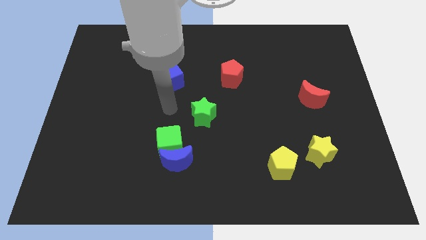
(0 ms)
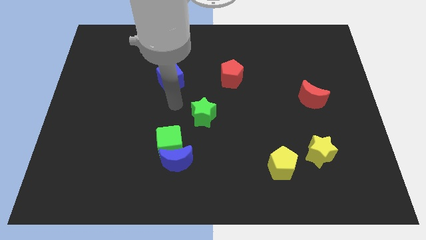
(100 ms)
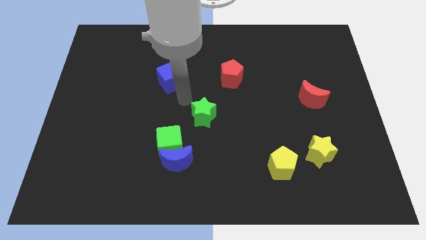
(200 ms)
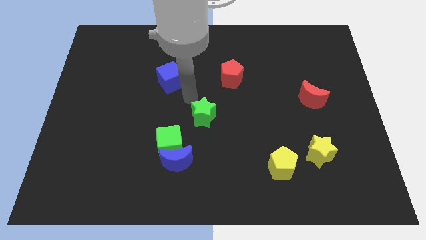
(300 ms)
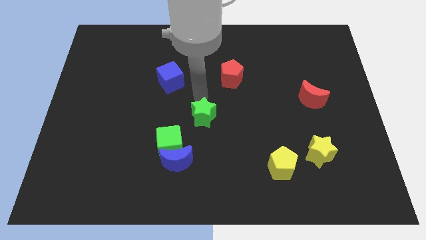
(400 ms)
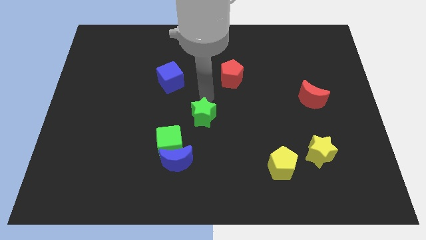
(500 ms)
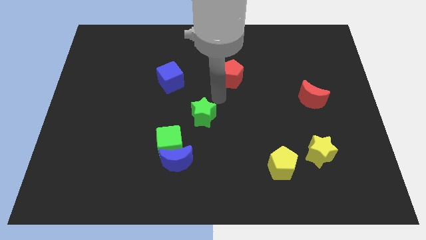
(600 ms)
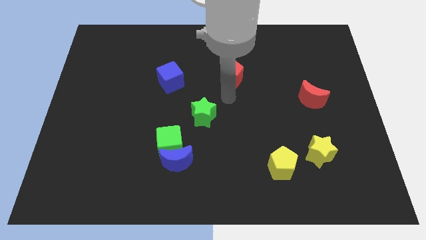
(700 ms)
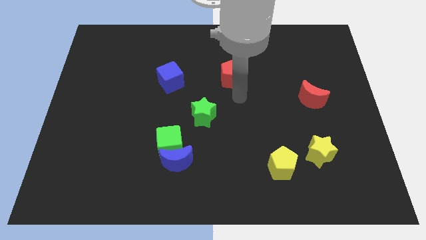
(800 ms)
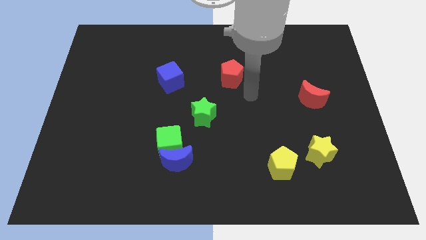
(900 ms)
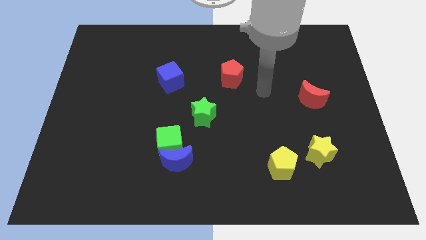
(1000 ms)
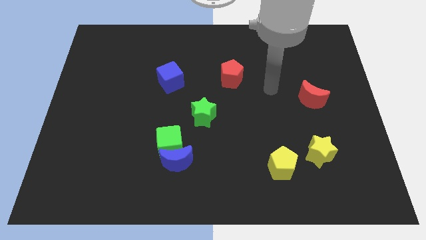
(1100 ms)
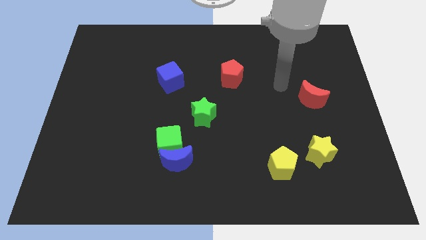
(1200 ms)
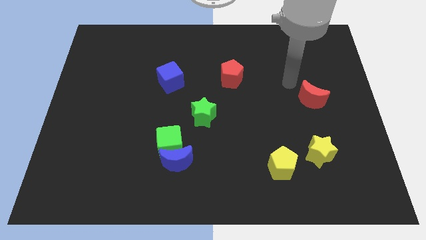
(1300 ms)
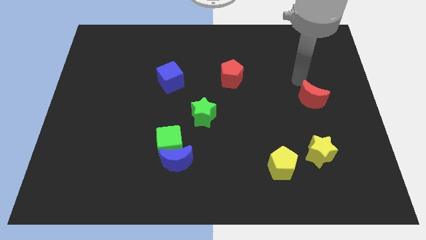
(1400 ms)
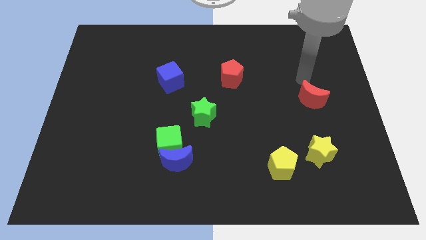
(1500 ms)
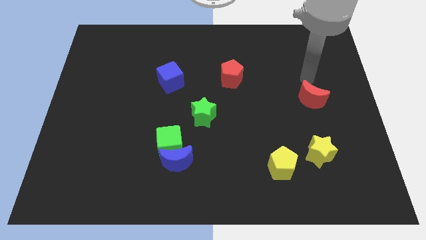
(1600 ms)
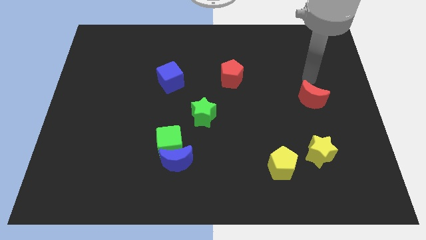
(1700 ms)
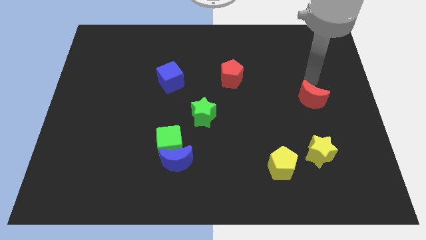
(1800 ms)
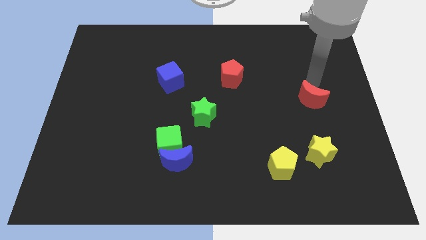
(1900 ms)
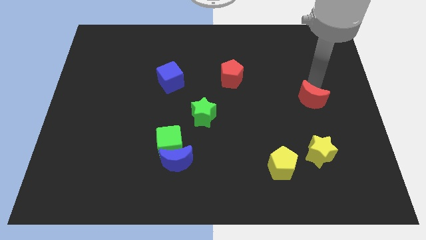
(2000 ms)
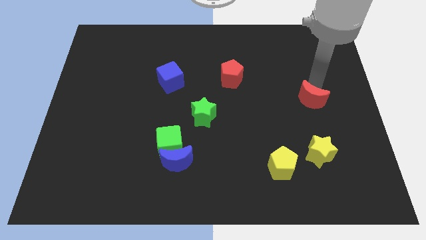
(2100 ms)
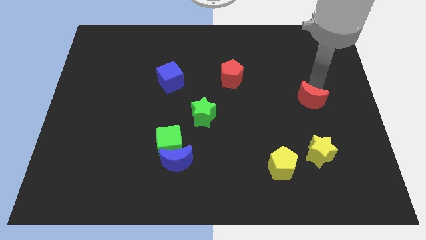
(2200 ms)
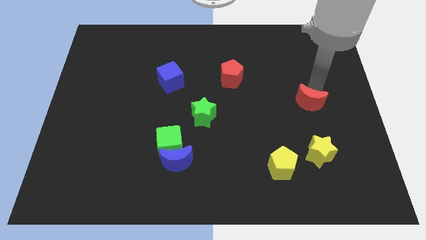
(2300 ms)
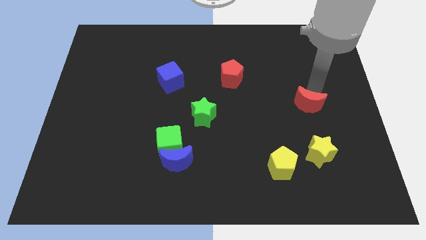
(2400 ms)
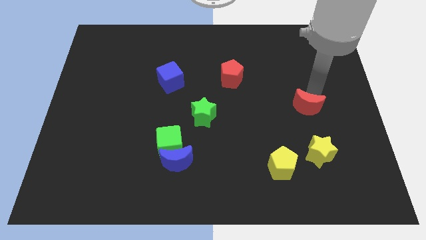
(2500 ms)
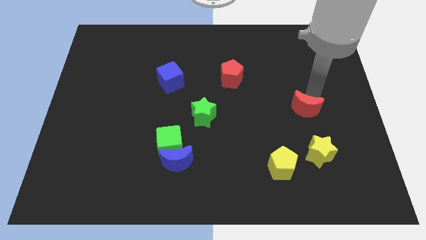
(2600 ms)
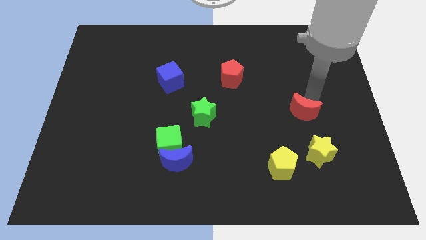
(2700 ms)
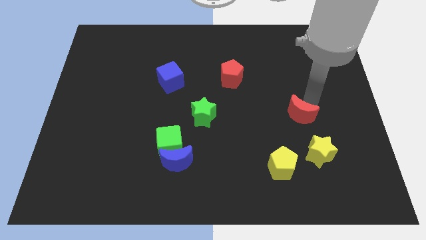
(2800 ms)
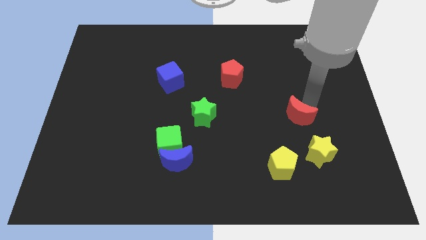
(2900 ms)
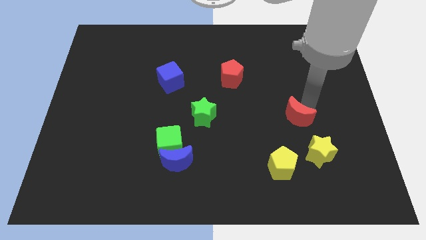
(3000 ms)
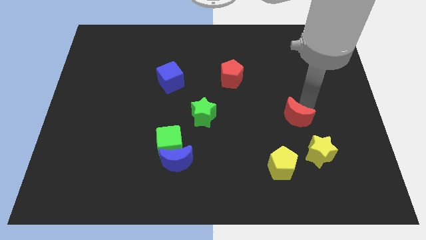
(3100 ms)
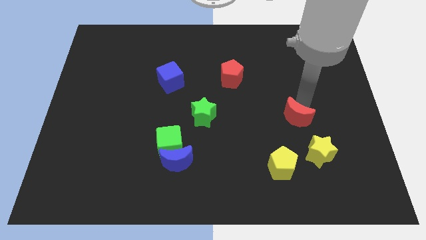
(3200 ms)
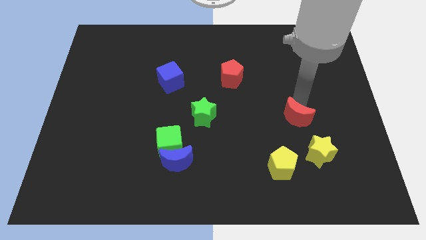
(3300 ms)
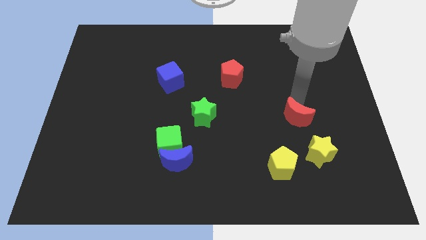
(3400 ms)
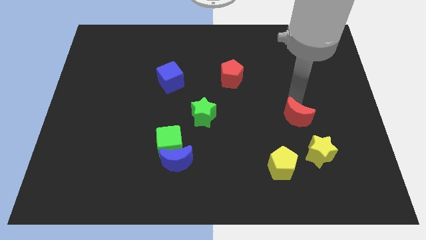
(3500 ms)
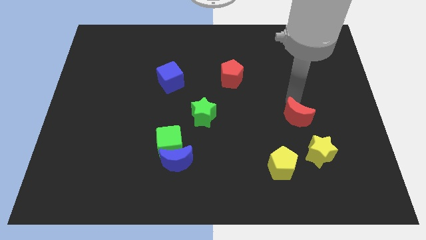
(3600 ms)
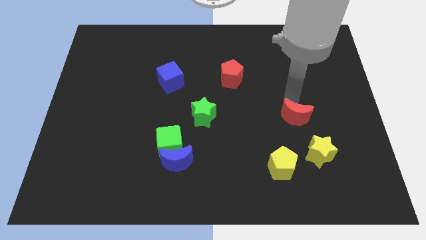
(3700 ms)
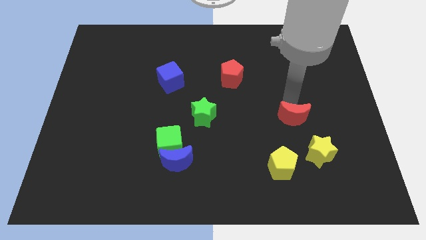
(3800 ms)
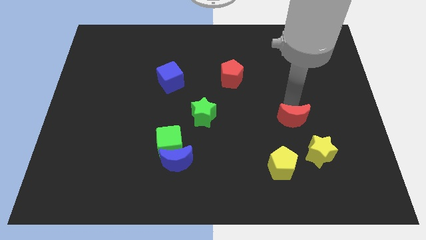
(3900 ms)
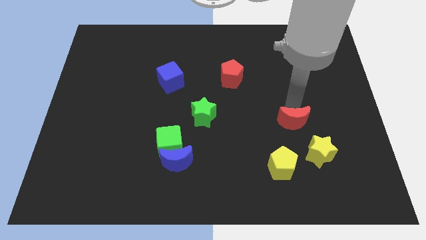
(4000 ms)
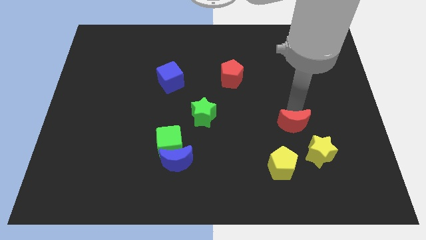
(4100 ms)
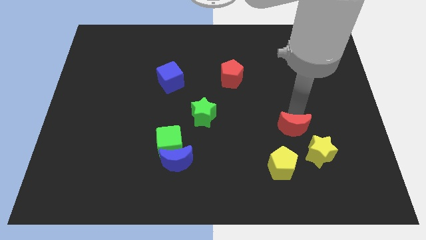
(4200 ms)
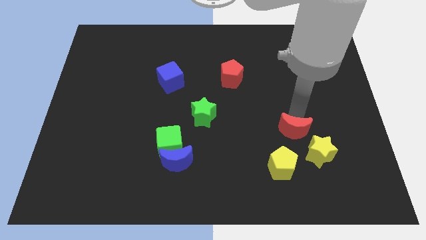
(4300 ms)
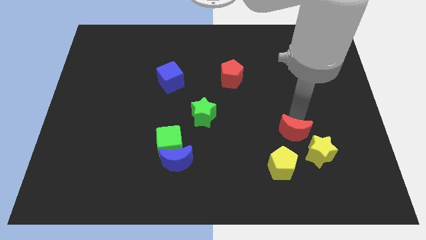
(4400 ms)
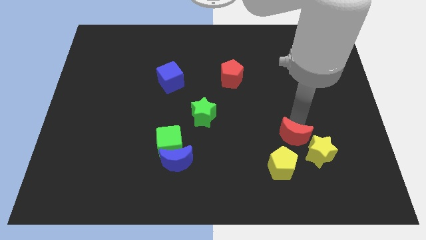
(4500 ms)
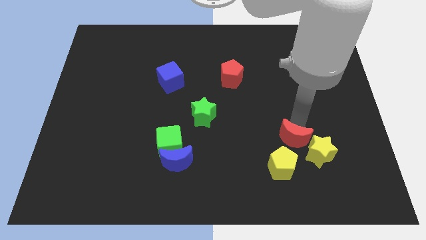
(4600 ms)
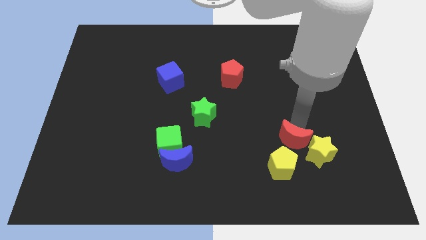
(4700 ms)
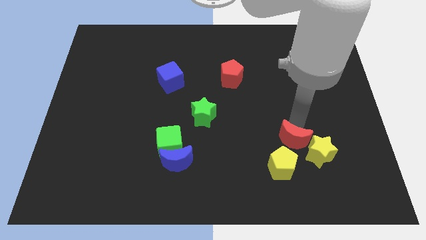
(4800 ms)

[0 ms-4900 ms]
move the red moon to the yellow star

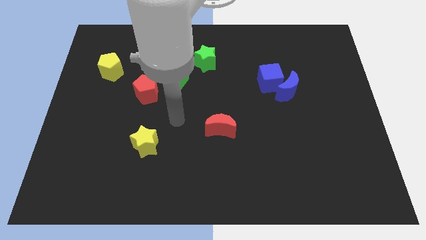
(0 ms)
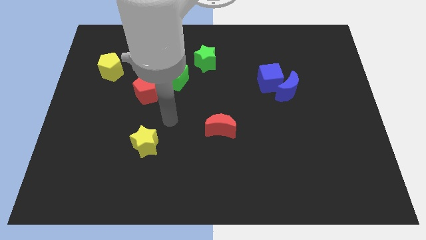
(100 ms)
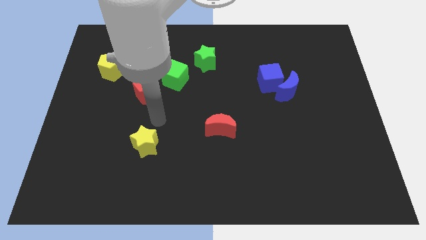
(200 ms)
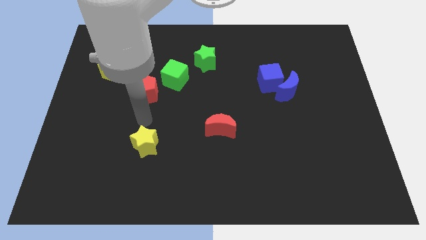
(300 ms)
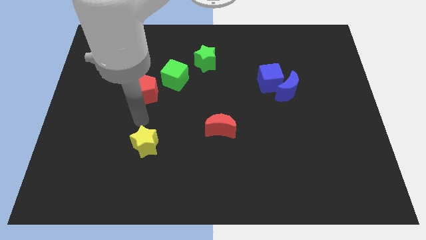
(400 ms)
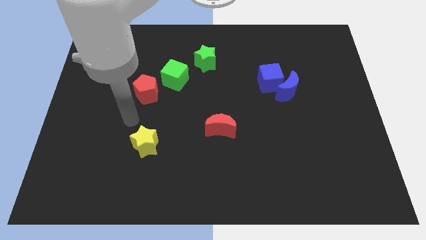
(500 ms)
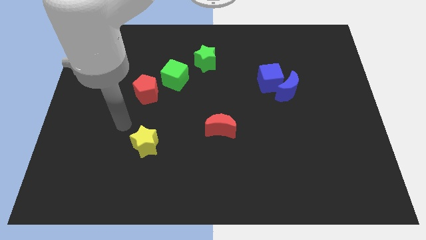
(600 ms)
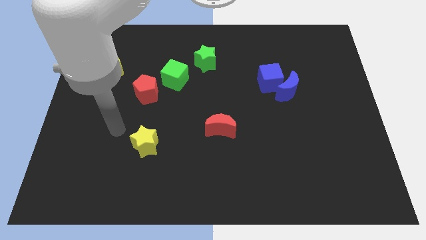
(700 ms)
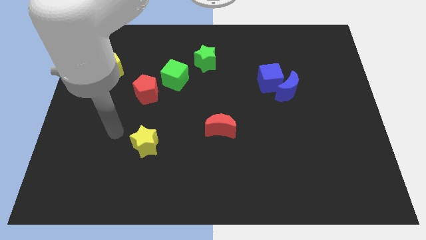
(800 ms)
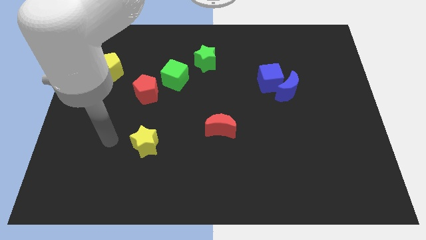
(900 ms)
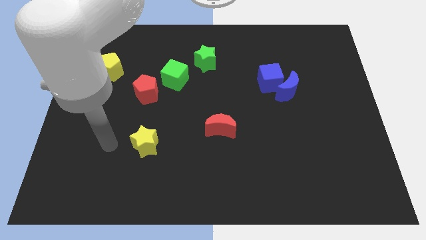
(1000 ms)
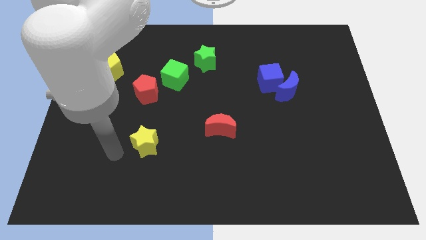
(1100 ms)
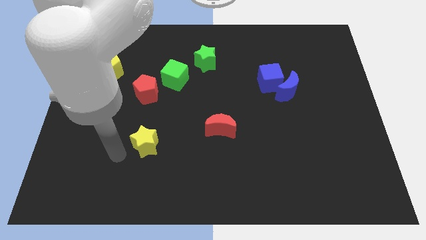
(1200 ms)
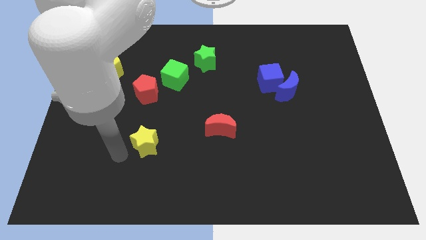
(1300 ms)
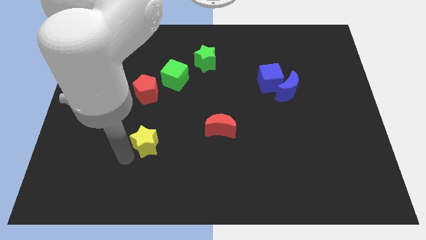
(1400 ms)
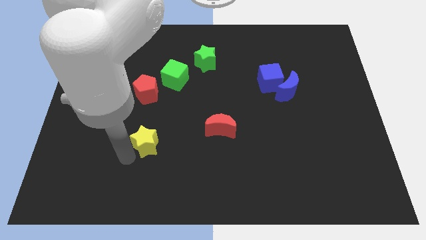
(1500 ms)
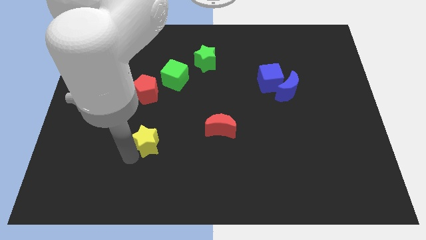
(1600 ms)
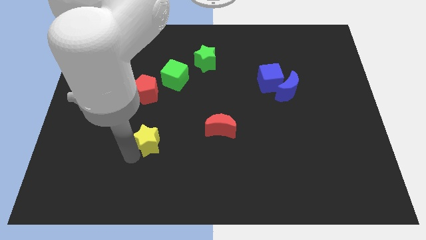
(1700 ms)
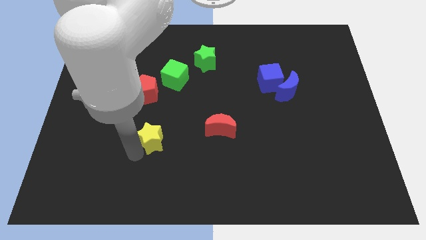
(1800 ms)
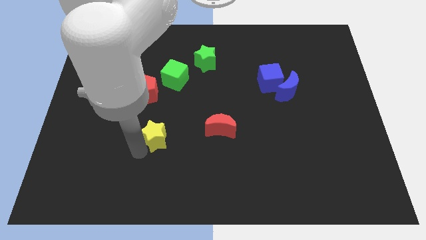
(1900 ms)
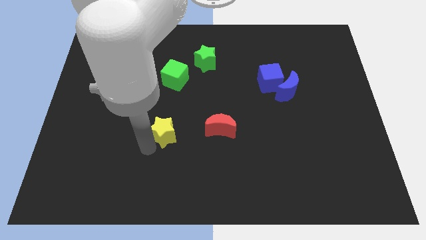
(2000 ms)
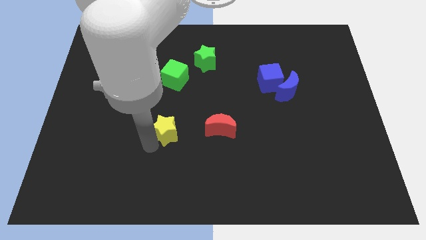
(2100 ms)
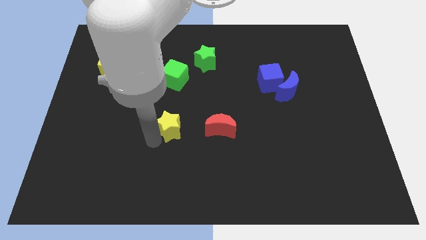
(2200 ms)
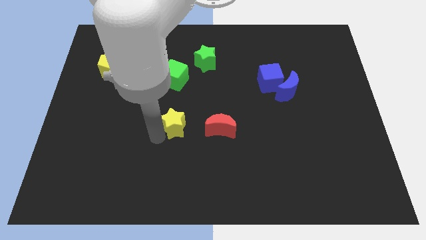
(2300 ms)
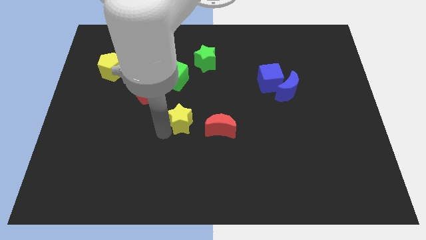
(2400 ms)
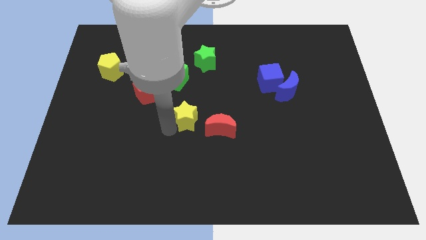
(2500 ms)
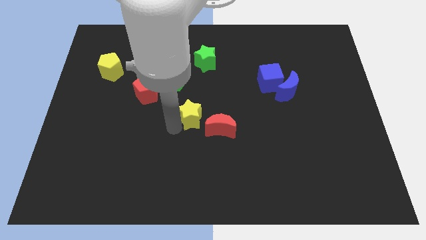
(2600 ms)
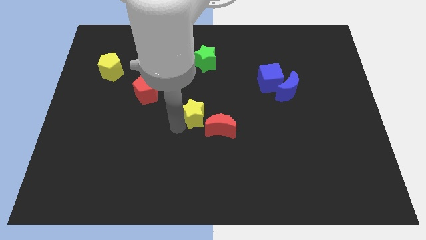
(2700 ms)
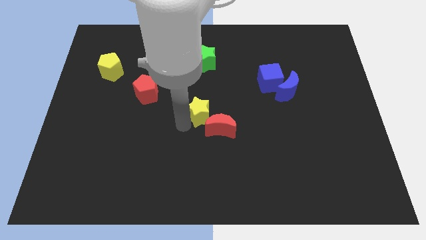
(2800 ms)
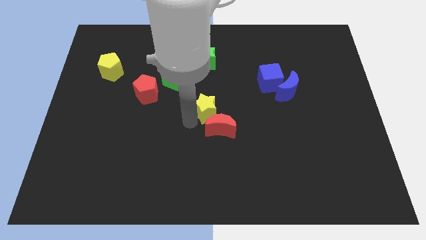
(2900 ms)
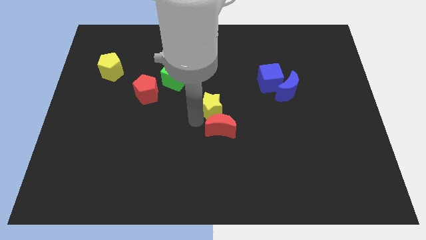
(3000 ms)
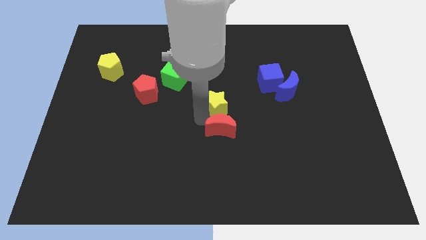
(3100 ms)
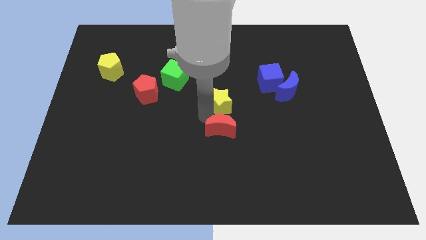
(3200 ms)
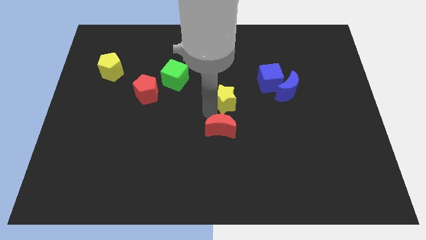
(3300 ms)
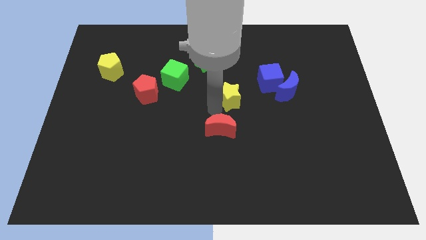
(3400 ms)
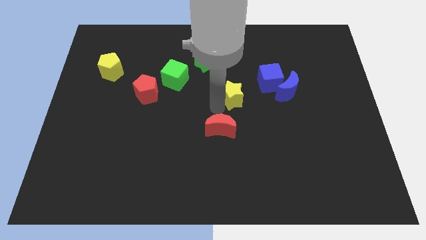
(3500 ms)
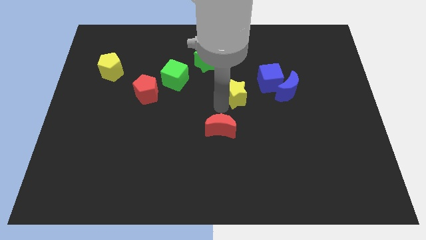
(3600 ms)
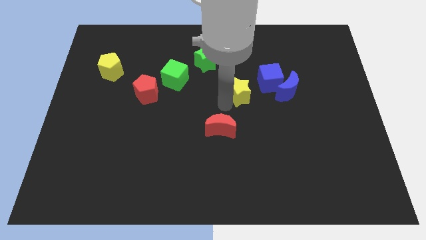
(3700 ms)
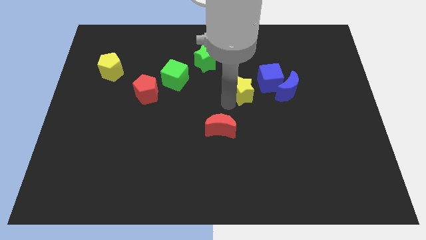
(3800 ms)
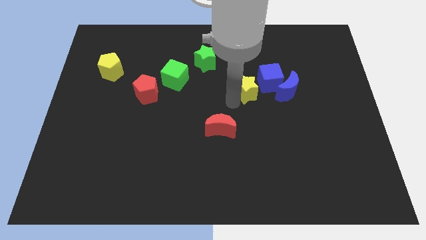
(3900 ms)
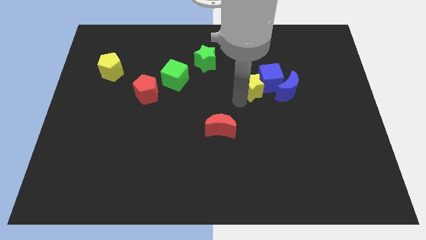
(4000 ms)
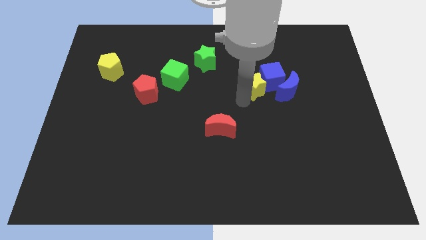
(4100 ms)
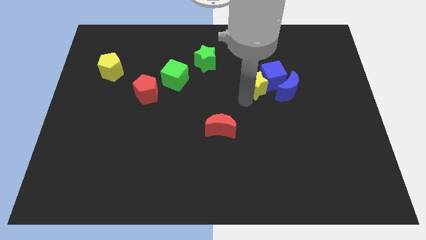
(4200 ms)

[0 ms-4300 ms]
move the yellow star to the blue cube
